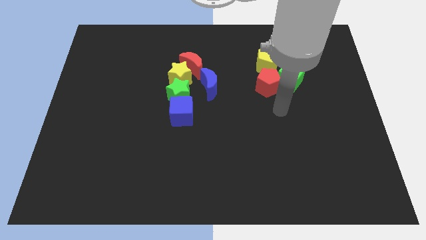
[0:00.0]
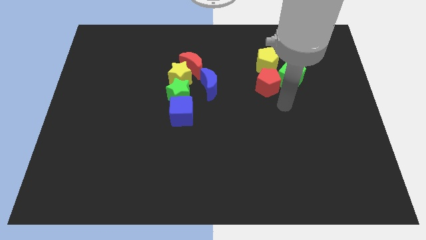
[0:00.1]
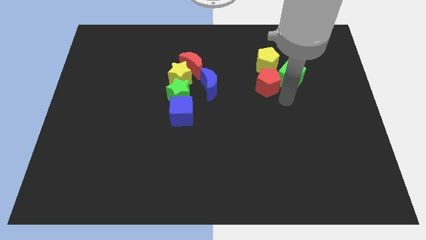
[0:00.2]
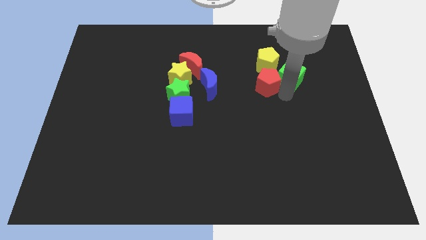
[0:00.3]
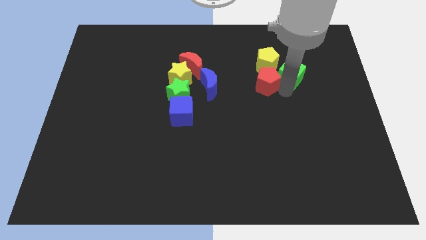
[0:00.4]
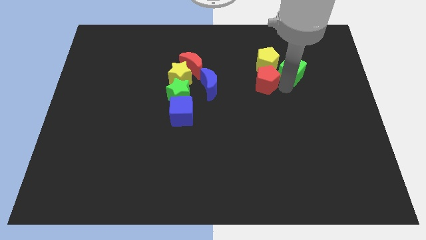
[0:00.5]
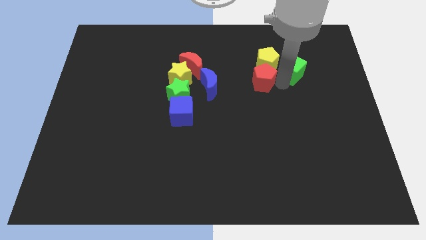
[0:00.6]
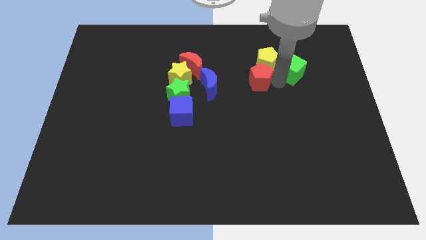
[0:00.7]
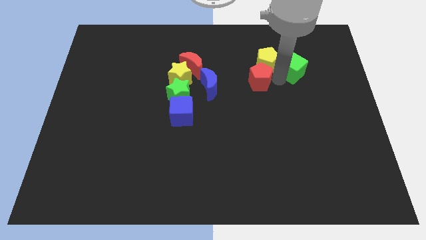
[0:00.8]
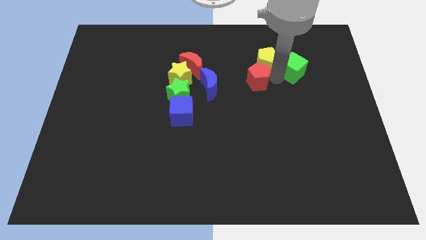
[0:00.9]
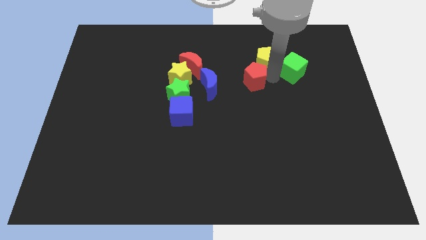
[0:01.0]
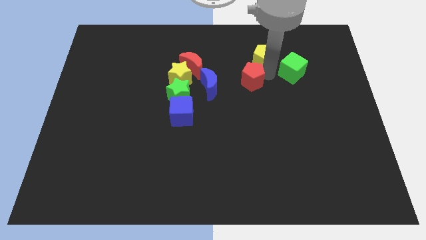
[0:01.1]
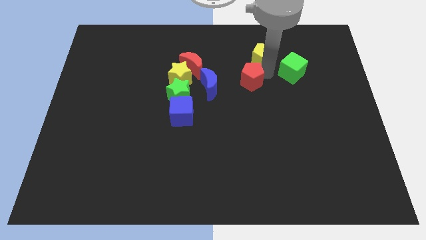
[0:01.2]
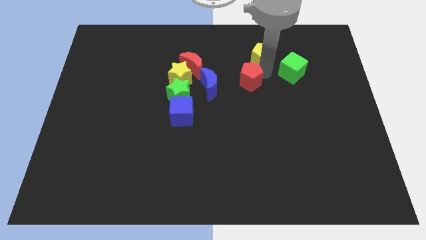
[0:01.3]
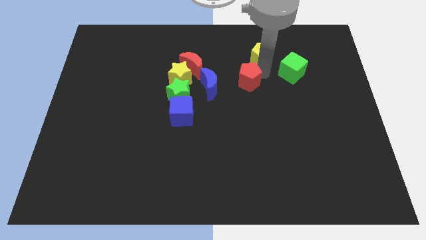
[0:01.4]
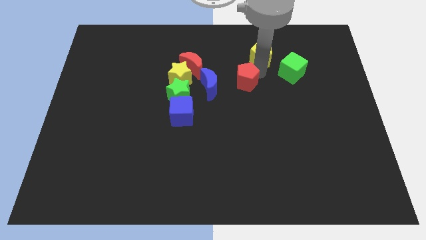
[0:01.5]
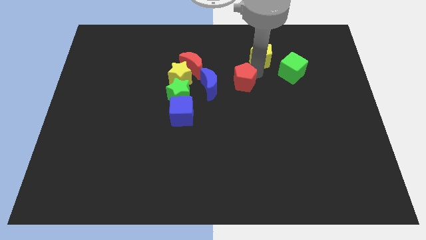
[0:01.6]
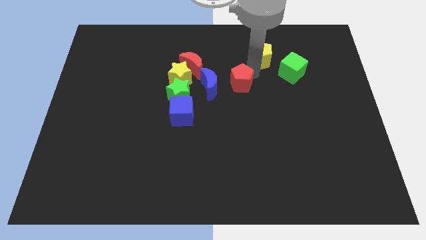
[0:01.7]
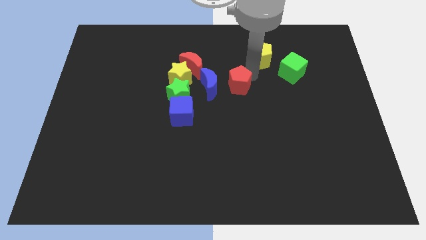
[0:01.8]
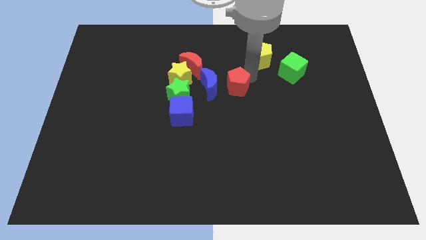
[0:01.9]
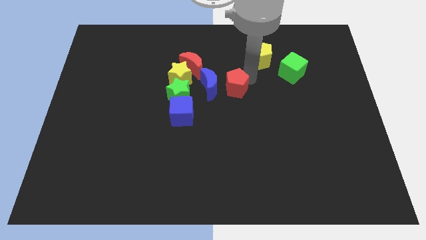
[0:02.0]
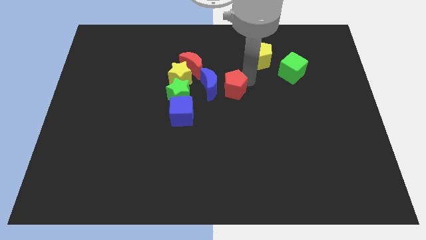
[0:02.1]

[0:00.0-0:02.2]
separate the green cube and the pentagons

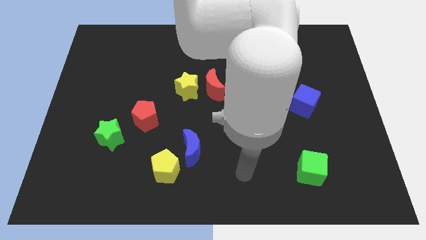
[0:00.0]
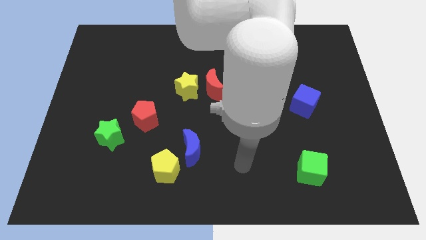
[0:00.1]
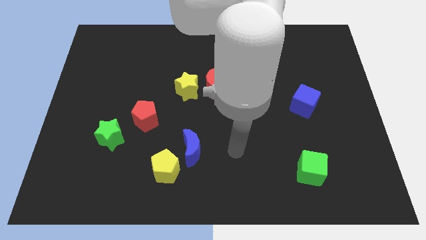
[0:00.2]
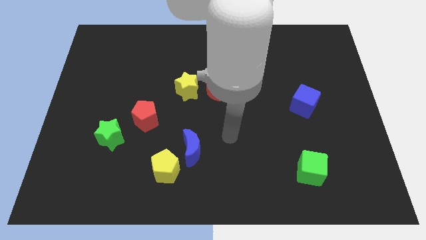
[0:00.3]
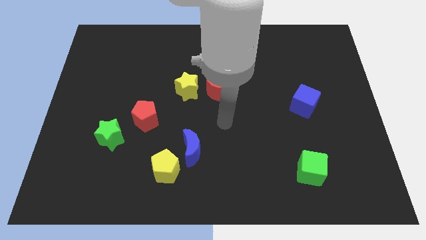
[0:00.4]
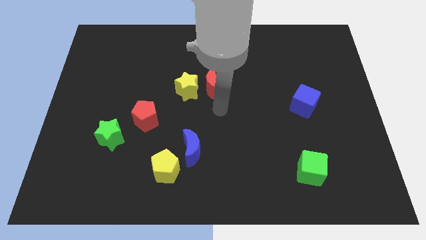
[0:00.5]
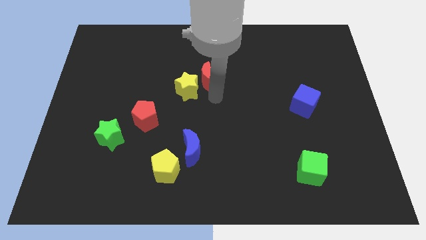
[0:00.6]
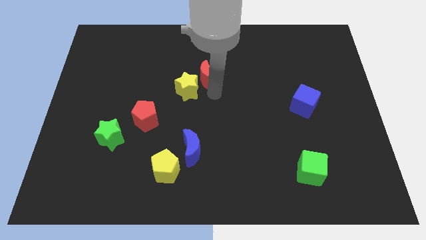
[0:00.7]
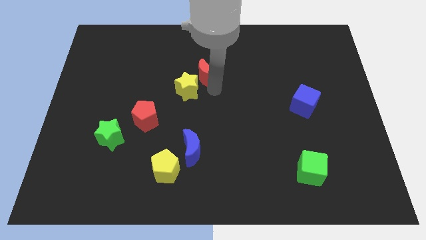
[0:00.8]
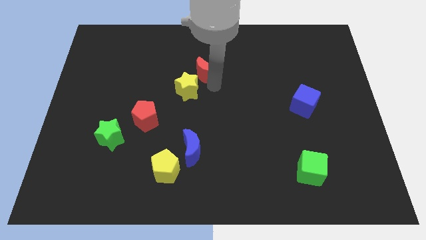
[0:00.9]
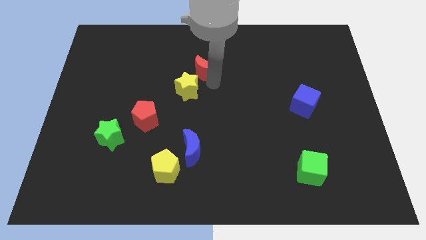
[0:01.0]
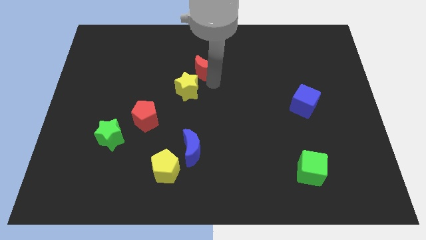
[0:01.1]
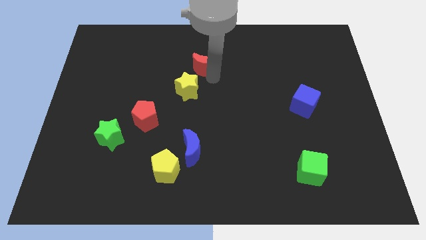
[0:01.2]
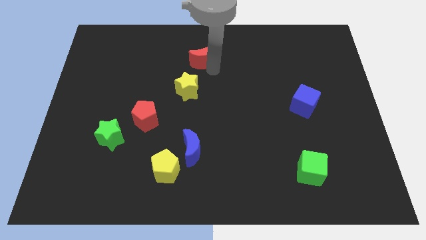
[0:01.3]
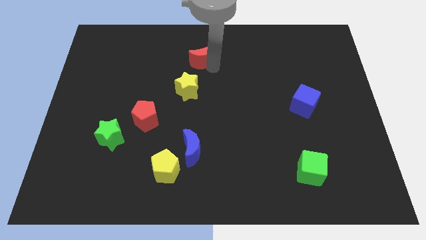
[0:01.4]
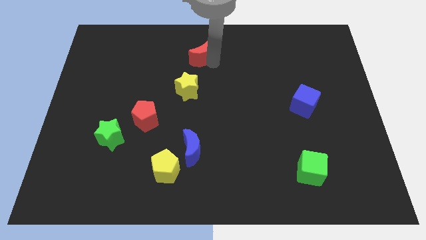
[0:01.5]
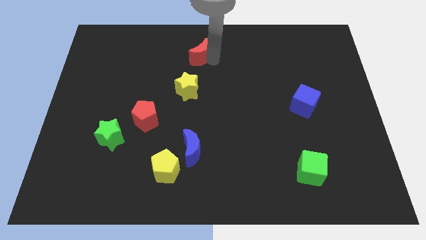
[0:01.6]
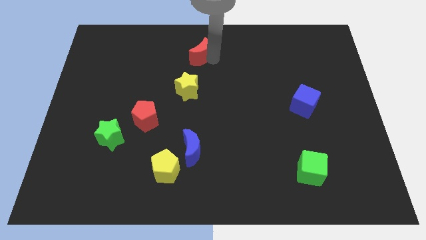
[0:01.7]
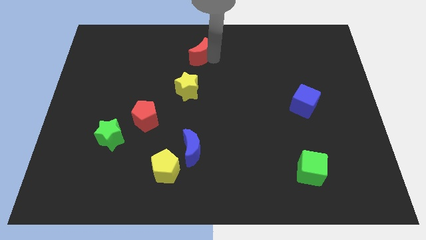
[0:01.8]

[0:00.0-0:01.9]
push the red crescent away from the yellow star

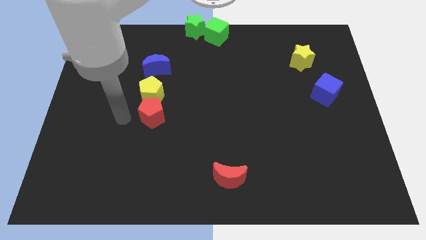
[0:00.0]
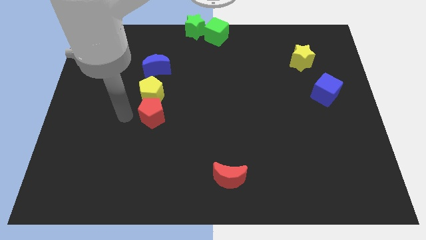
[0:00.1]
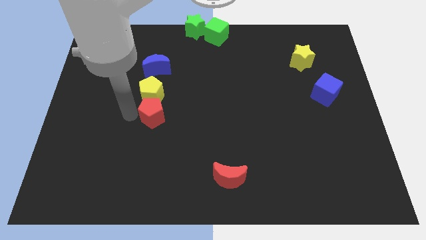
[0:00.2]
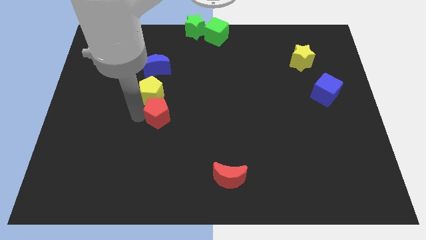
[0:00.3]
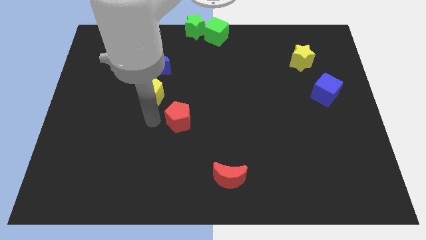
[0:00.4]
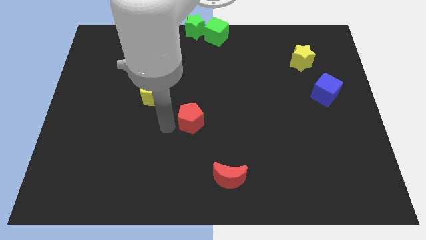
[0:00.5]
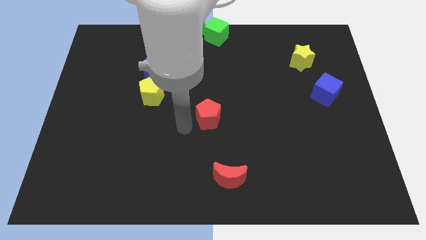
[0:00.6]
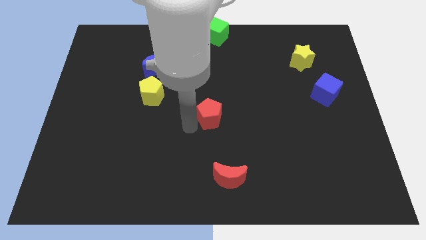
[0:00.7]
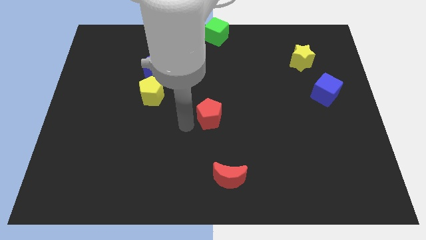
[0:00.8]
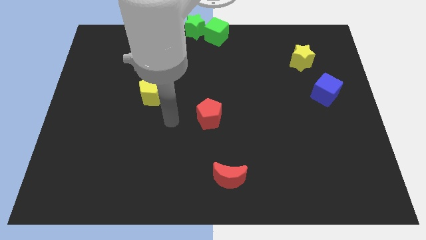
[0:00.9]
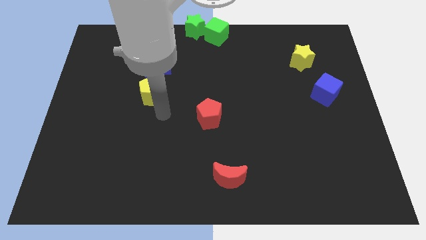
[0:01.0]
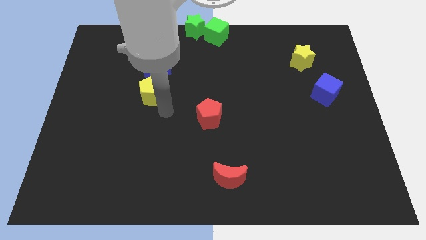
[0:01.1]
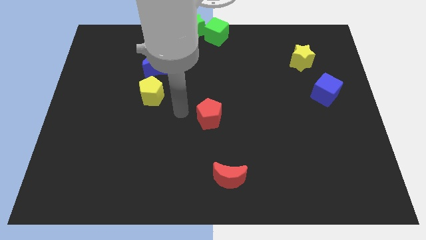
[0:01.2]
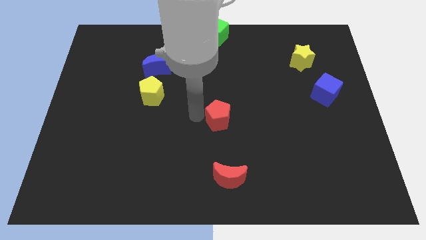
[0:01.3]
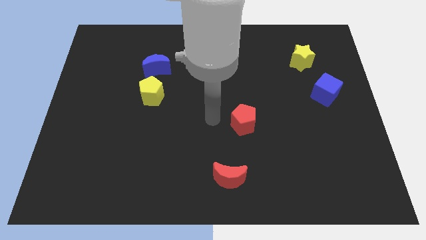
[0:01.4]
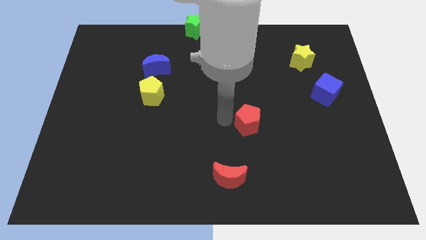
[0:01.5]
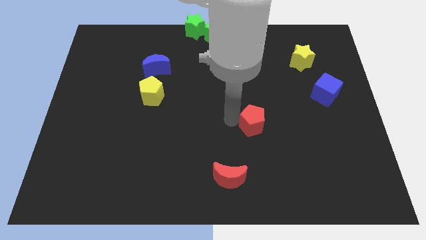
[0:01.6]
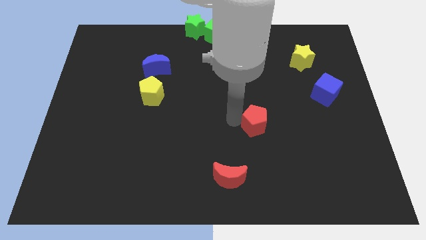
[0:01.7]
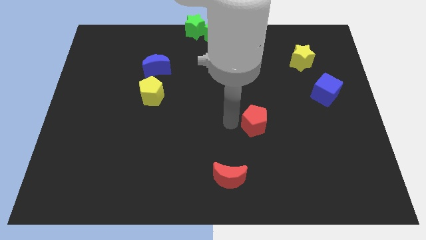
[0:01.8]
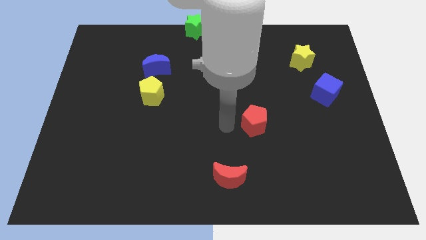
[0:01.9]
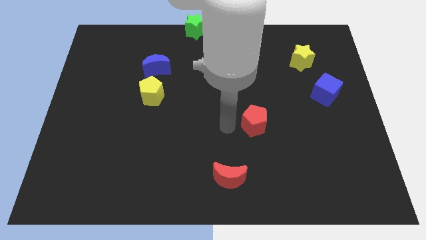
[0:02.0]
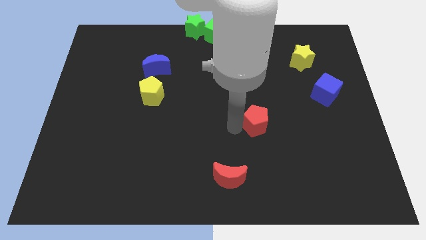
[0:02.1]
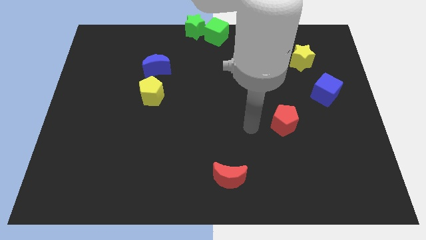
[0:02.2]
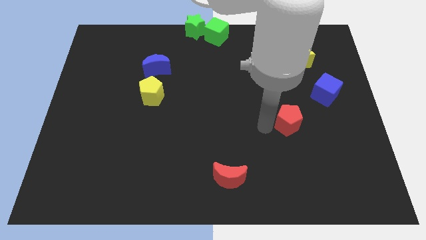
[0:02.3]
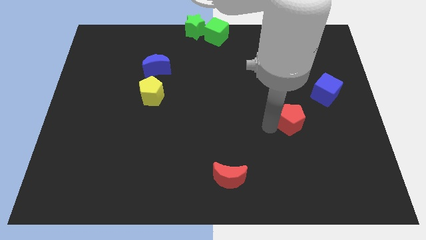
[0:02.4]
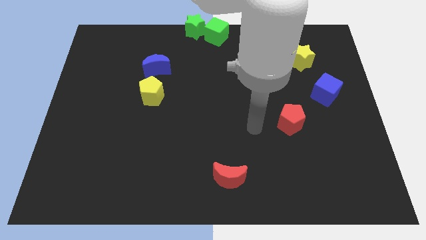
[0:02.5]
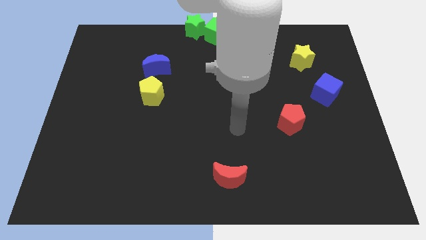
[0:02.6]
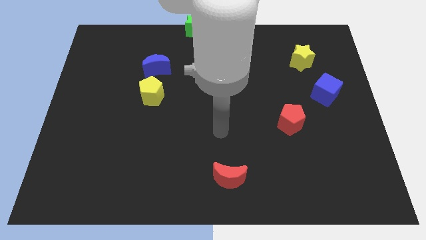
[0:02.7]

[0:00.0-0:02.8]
move the red pentagon to the bottom left of the blue cube

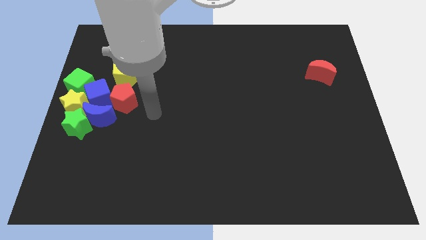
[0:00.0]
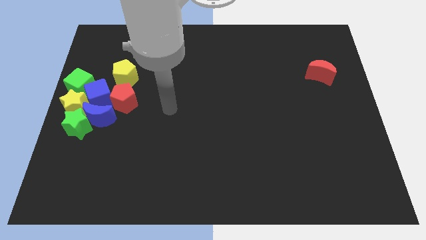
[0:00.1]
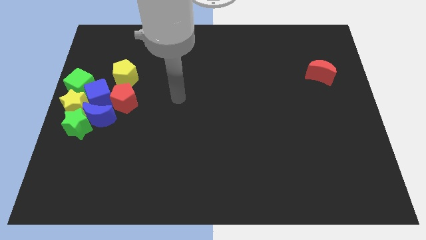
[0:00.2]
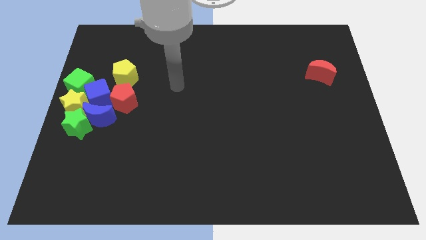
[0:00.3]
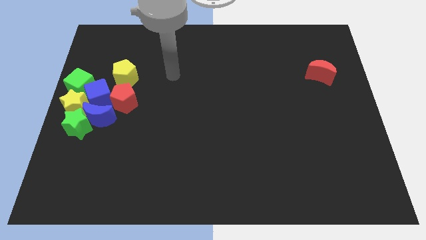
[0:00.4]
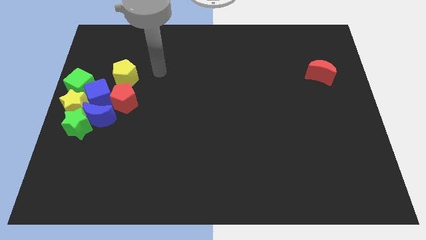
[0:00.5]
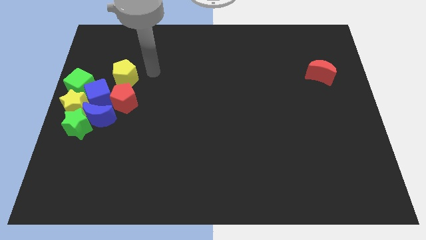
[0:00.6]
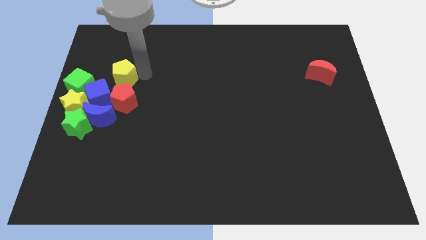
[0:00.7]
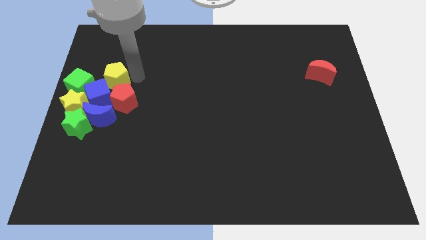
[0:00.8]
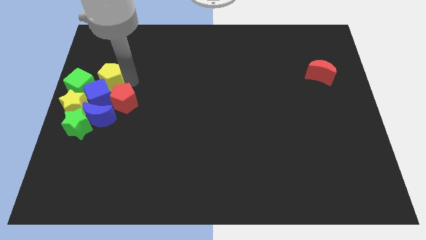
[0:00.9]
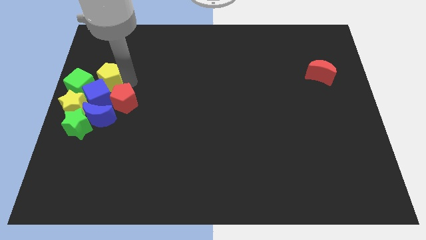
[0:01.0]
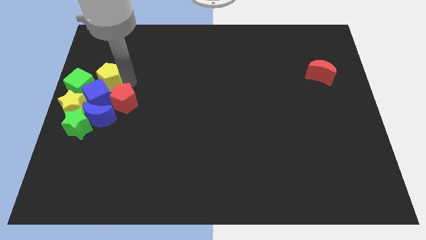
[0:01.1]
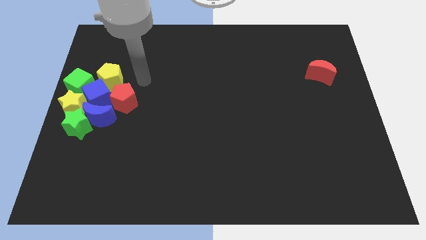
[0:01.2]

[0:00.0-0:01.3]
push the yellow blocks into the group lo blocks

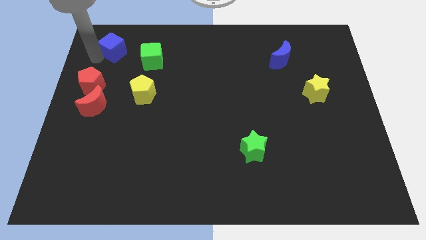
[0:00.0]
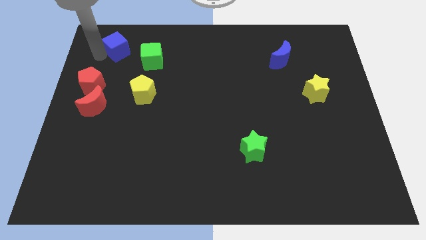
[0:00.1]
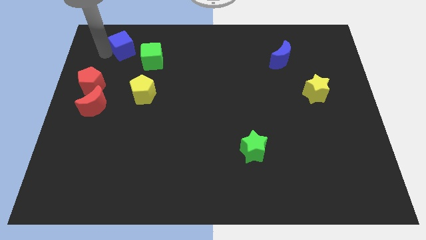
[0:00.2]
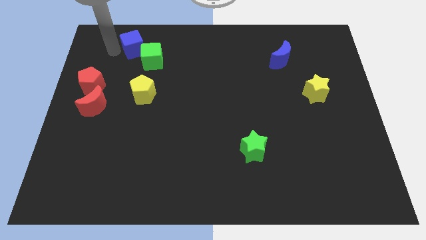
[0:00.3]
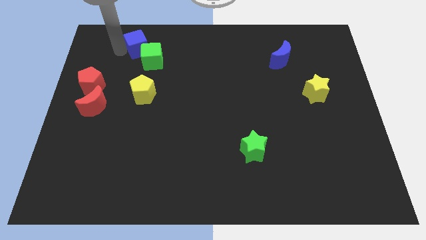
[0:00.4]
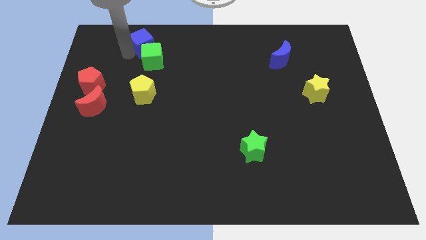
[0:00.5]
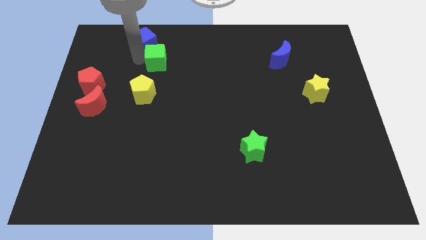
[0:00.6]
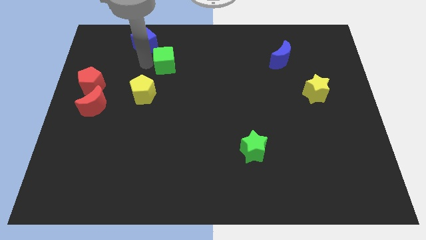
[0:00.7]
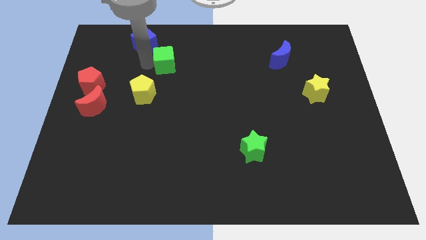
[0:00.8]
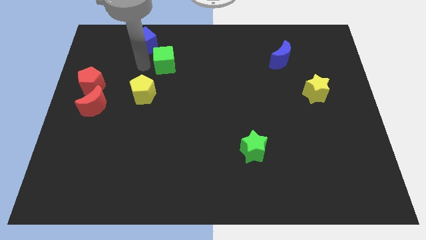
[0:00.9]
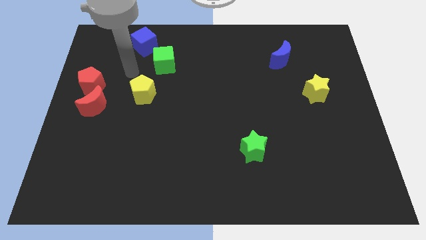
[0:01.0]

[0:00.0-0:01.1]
slide blue cube into the green cube
